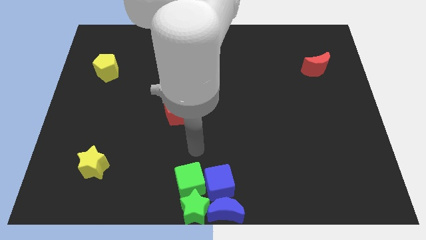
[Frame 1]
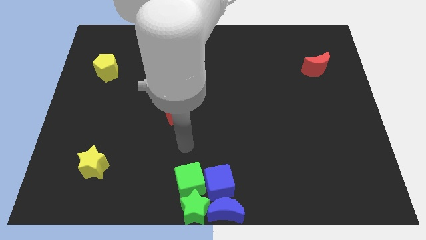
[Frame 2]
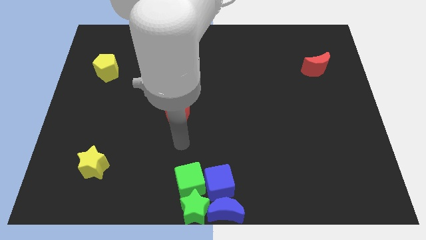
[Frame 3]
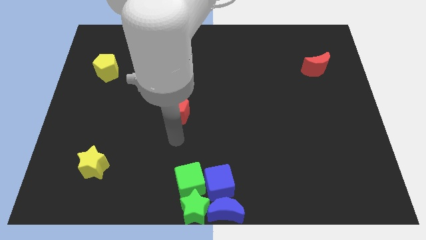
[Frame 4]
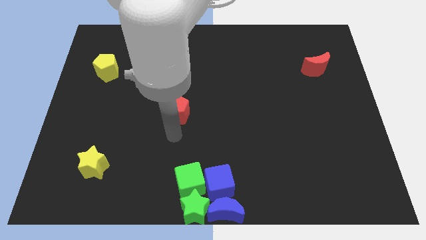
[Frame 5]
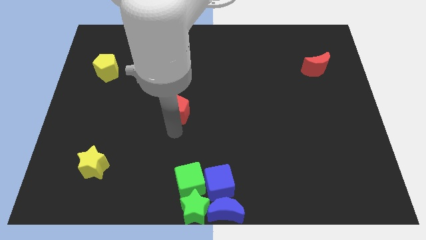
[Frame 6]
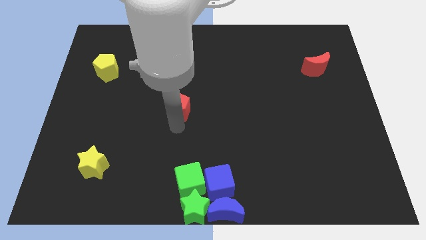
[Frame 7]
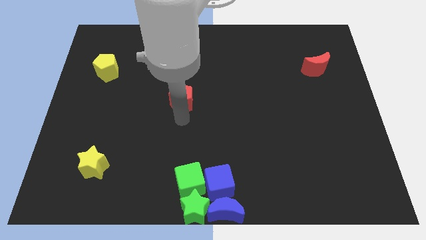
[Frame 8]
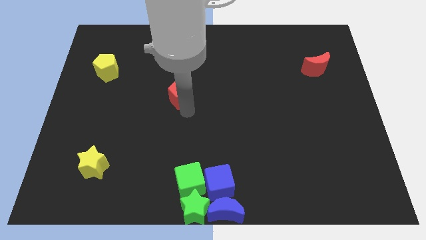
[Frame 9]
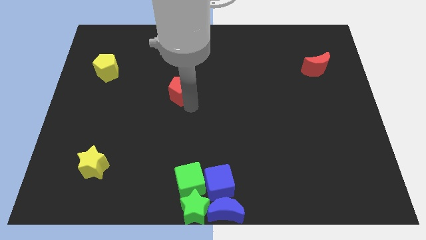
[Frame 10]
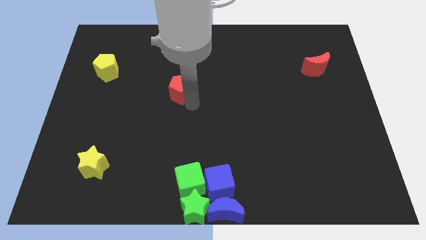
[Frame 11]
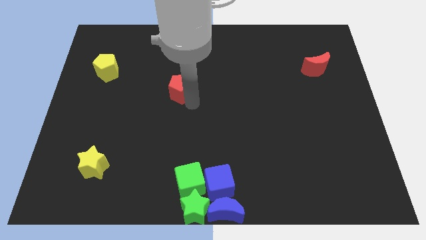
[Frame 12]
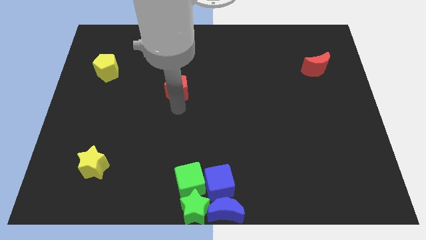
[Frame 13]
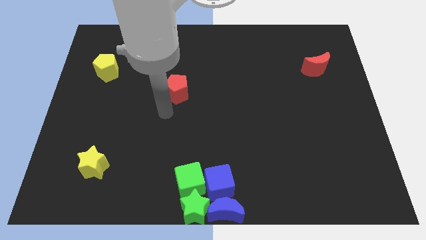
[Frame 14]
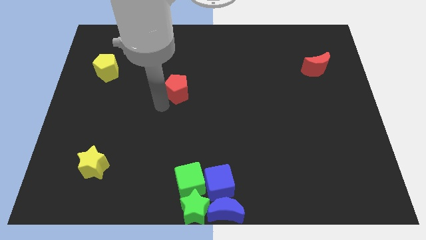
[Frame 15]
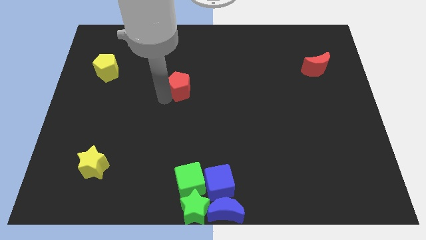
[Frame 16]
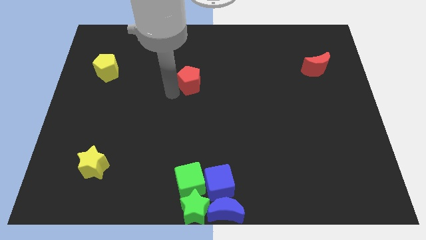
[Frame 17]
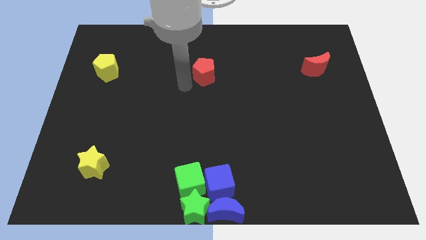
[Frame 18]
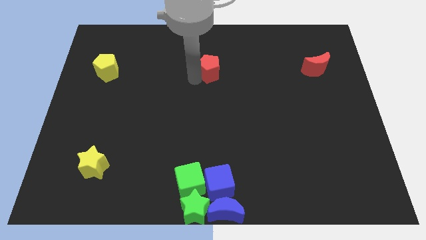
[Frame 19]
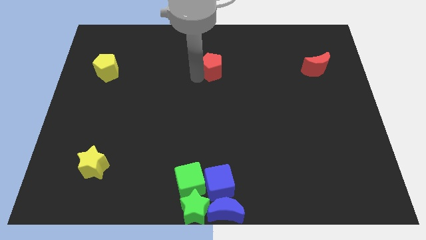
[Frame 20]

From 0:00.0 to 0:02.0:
move the red pentagon between red moon and yellow pentagon

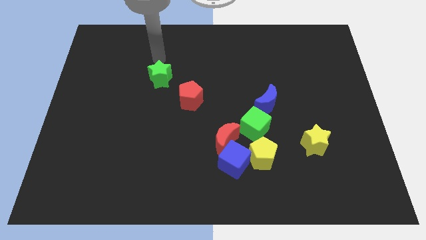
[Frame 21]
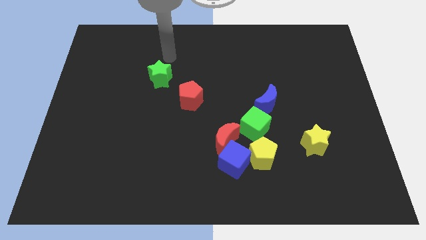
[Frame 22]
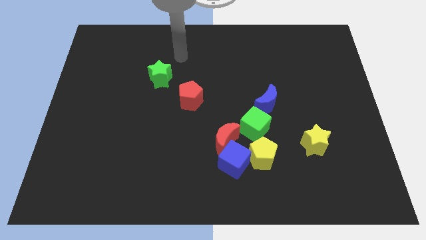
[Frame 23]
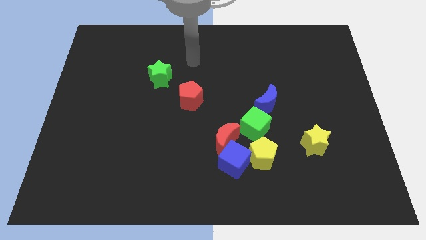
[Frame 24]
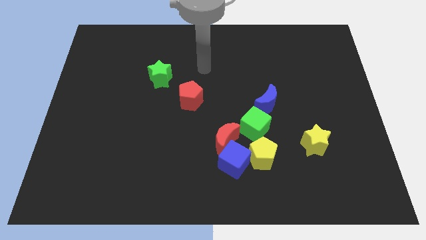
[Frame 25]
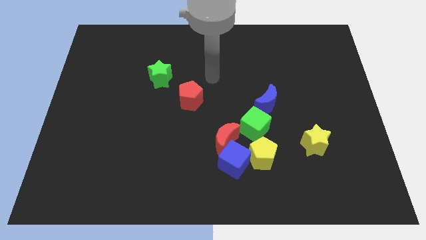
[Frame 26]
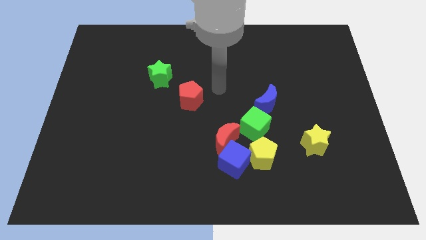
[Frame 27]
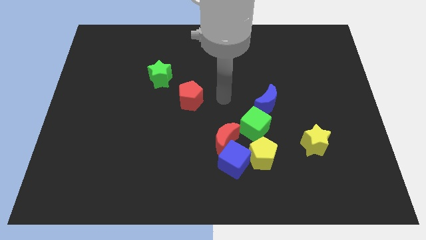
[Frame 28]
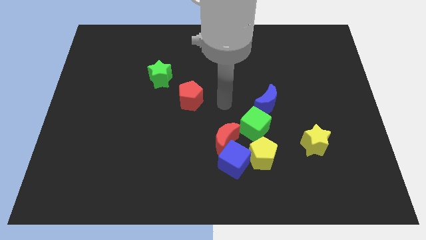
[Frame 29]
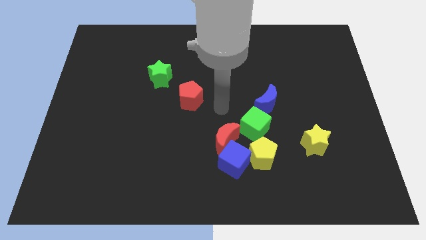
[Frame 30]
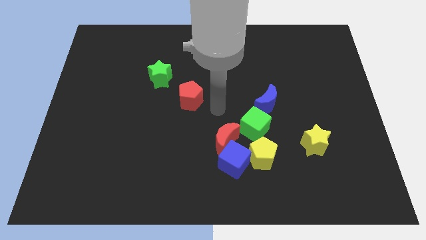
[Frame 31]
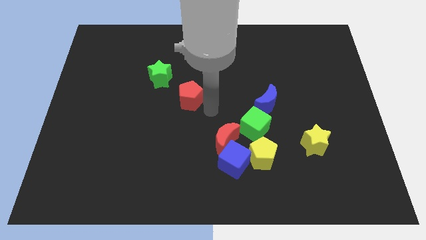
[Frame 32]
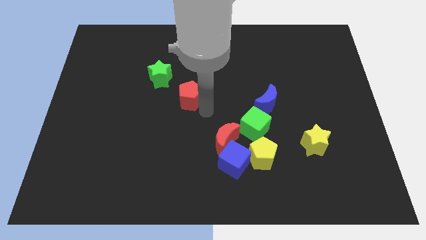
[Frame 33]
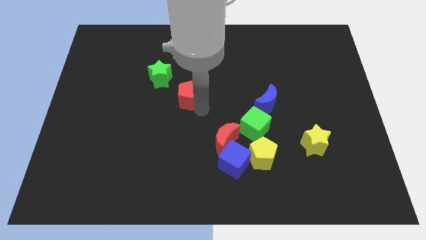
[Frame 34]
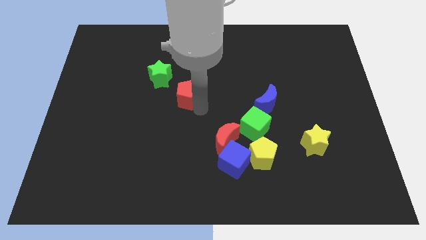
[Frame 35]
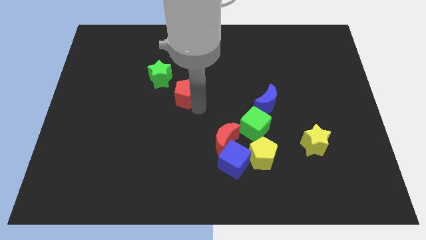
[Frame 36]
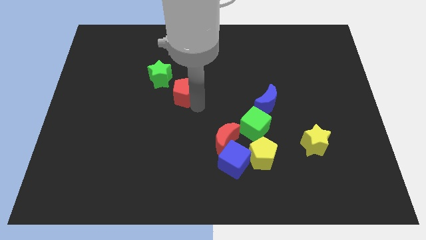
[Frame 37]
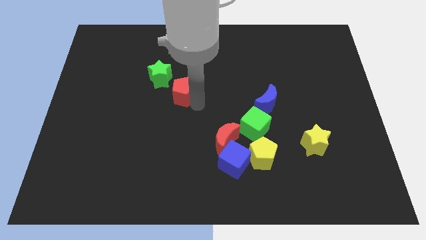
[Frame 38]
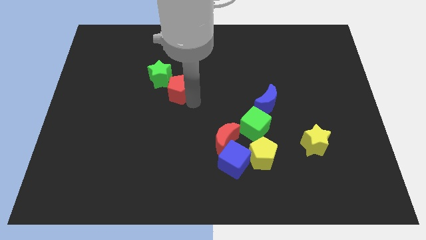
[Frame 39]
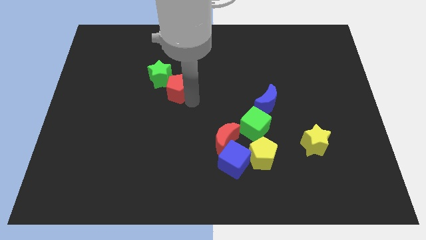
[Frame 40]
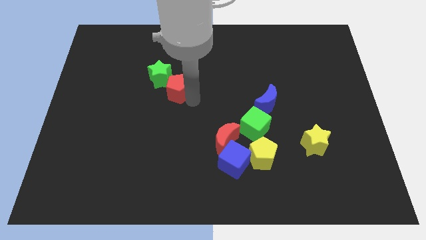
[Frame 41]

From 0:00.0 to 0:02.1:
push the red pentagon close to the green star

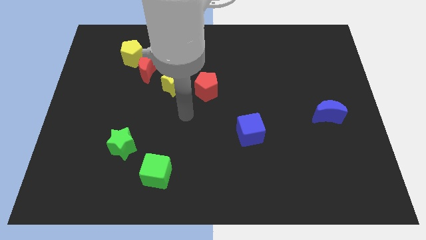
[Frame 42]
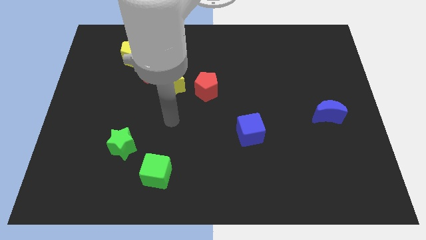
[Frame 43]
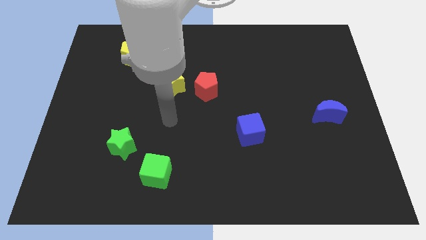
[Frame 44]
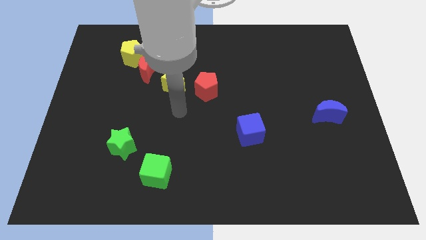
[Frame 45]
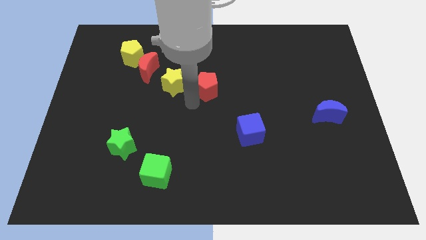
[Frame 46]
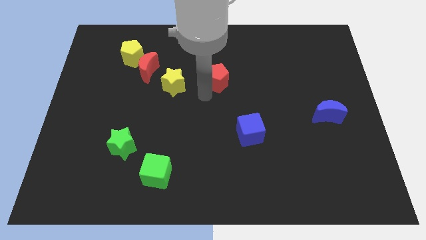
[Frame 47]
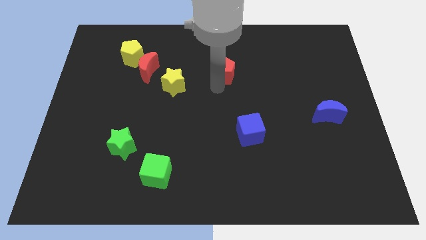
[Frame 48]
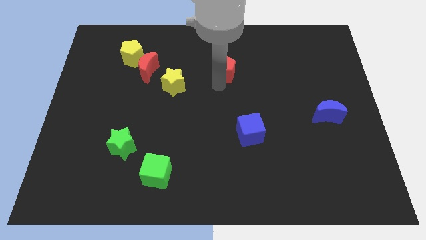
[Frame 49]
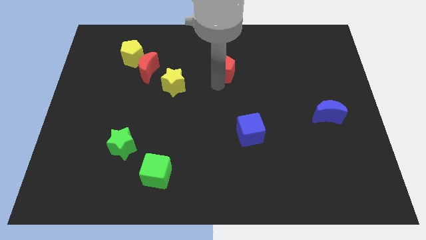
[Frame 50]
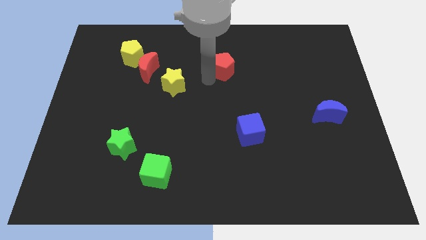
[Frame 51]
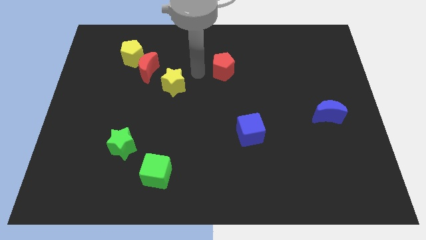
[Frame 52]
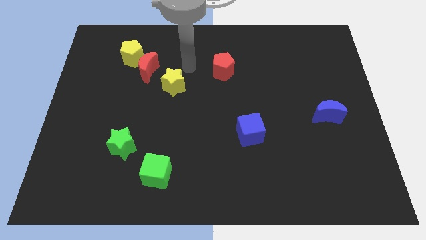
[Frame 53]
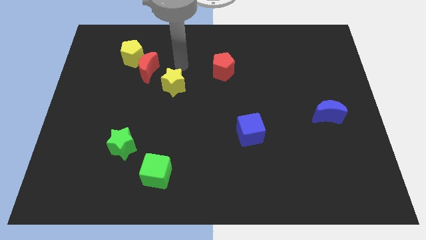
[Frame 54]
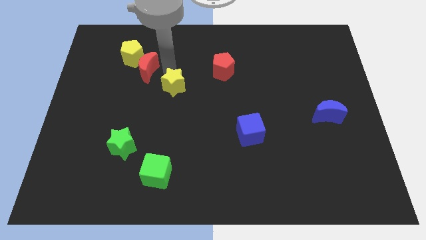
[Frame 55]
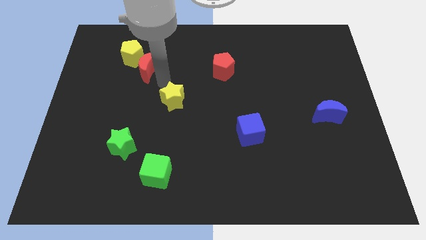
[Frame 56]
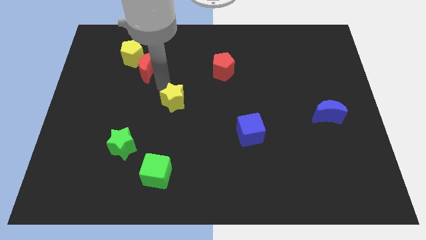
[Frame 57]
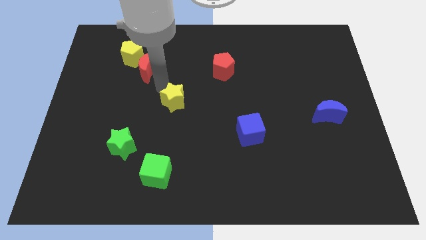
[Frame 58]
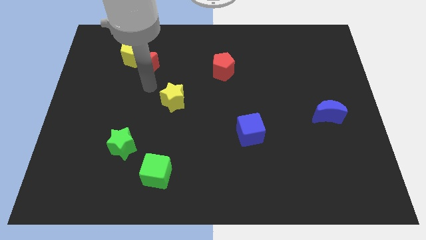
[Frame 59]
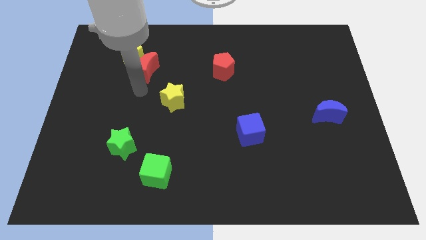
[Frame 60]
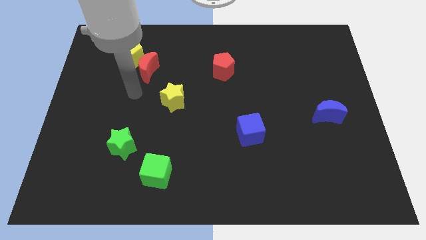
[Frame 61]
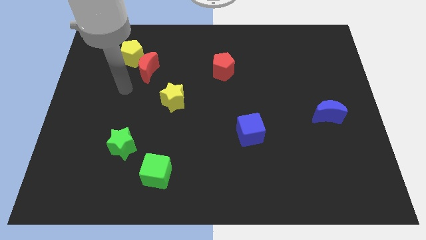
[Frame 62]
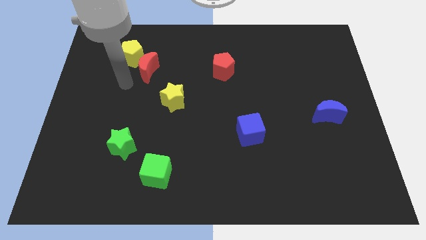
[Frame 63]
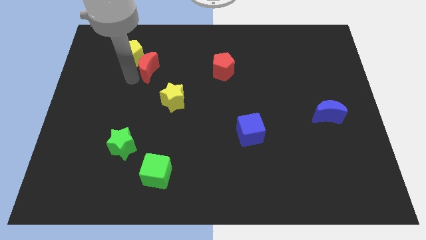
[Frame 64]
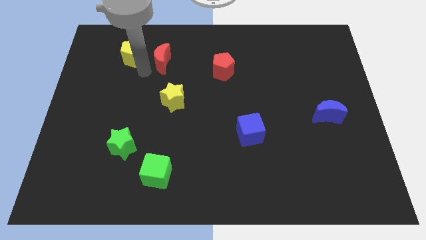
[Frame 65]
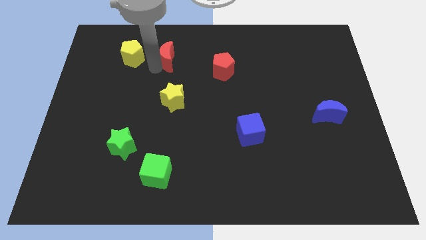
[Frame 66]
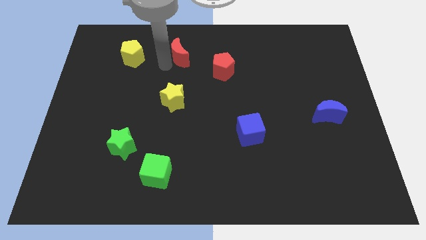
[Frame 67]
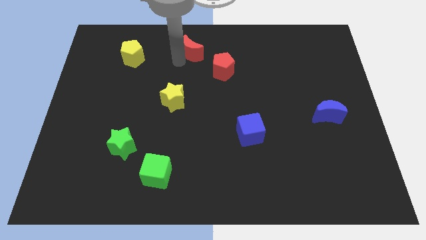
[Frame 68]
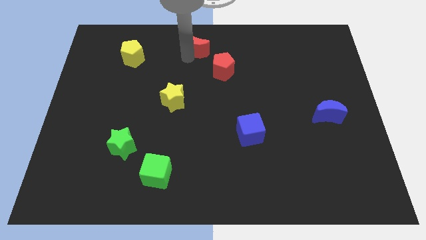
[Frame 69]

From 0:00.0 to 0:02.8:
place the red moon diagonal to the red pentagon

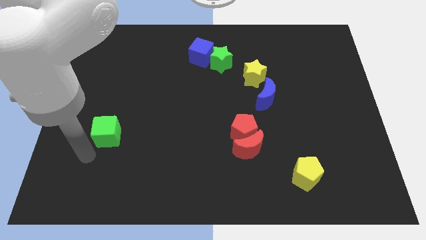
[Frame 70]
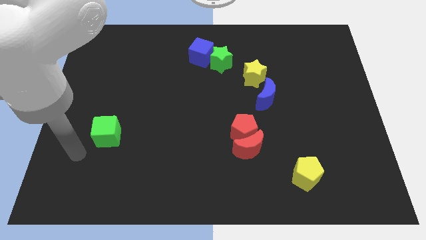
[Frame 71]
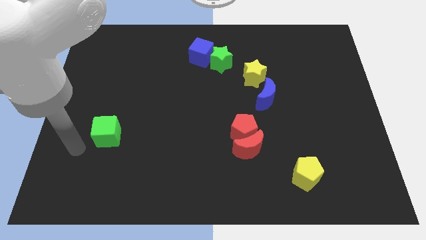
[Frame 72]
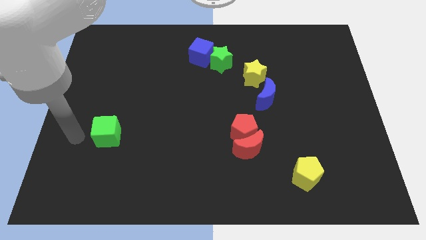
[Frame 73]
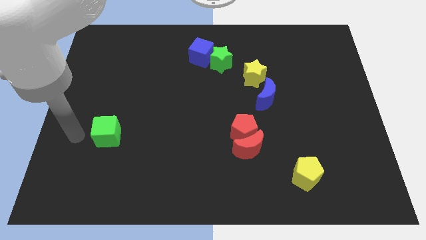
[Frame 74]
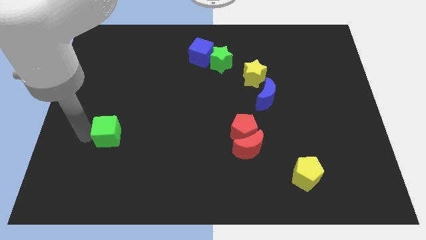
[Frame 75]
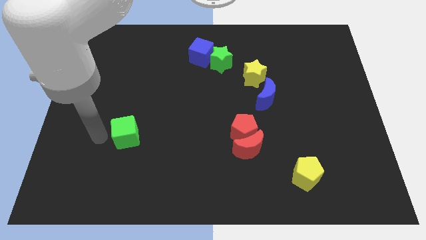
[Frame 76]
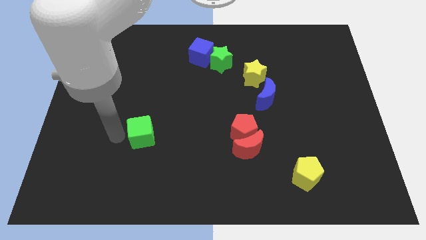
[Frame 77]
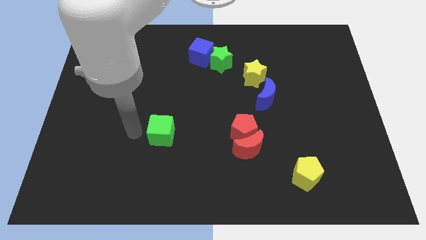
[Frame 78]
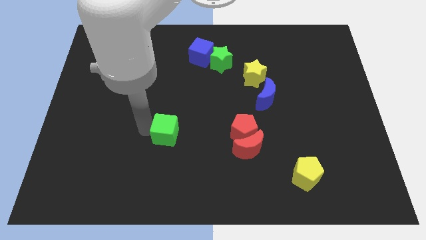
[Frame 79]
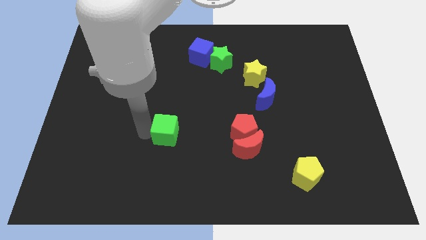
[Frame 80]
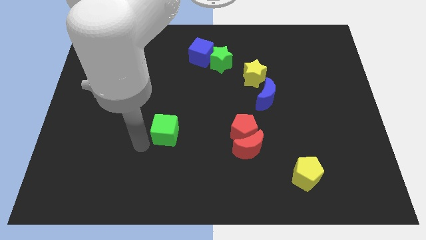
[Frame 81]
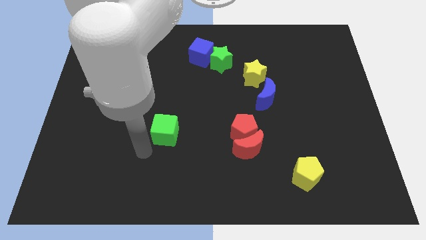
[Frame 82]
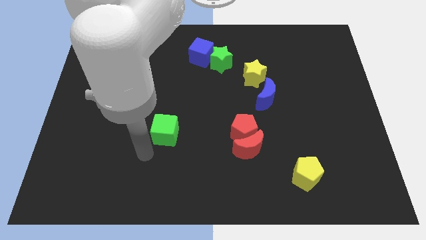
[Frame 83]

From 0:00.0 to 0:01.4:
move the green cube towards the red blocks

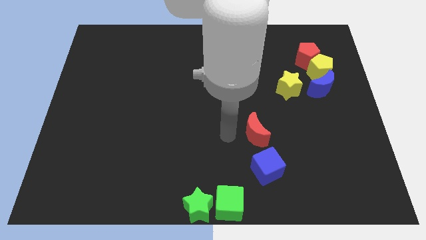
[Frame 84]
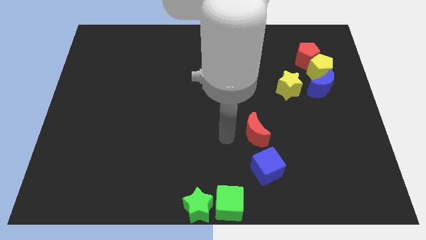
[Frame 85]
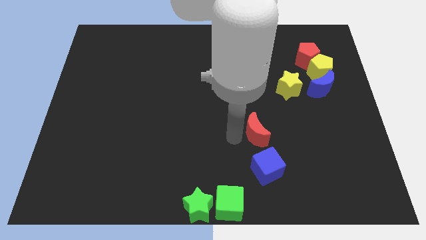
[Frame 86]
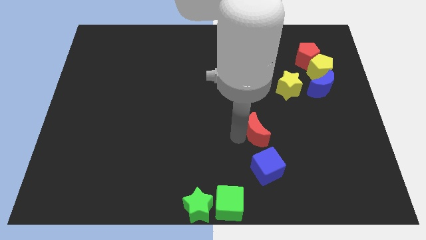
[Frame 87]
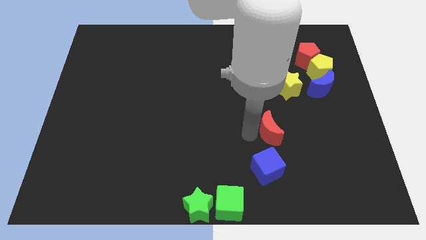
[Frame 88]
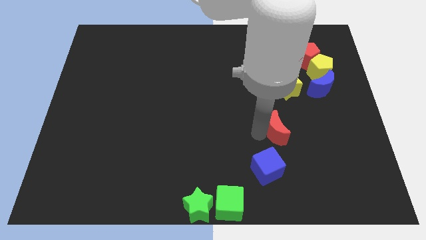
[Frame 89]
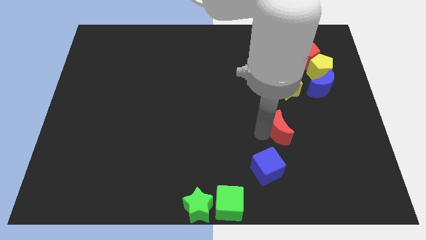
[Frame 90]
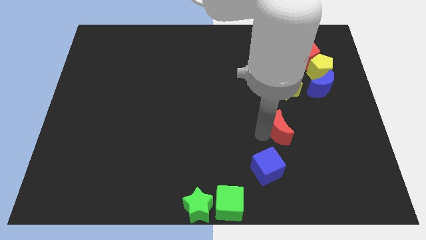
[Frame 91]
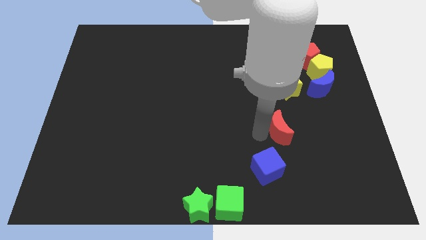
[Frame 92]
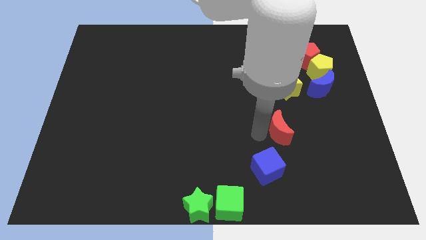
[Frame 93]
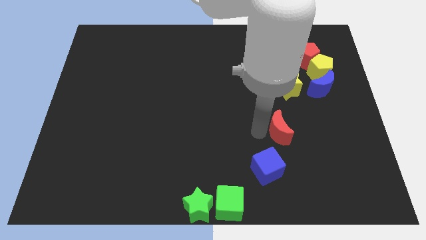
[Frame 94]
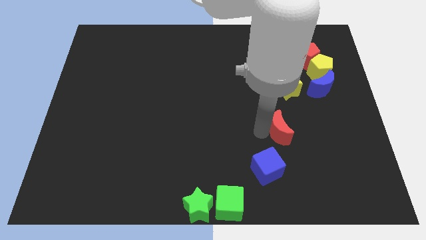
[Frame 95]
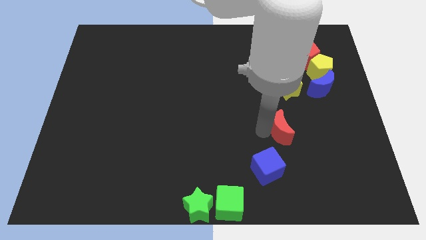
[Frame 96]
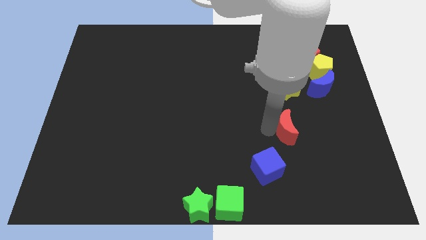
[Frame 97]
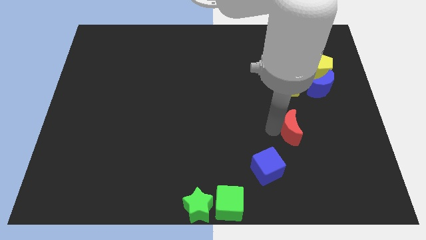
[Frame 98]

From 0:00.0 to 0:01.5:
move the red crescent slightly right
